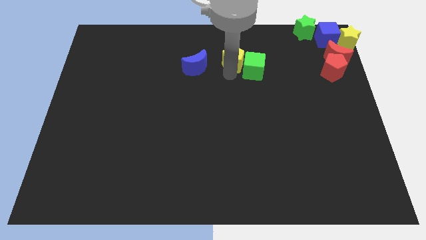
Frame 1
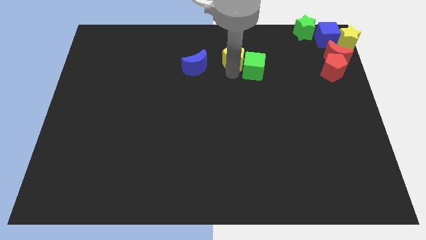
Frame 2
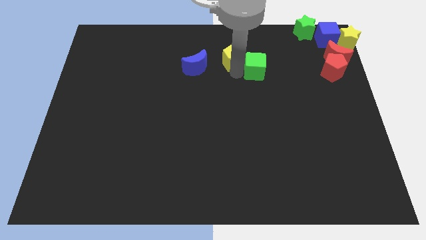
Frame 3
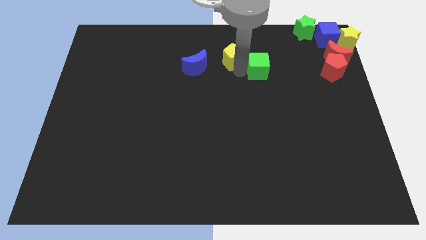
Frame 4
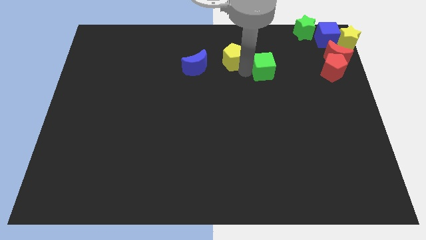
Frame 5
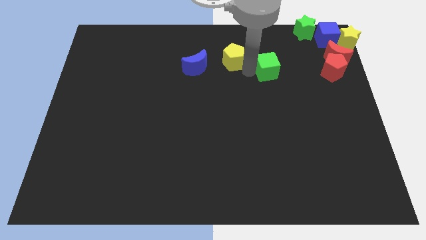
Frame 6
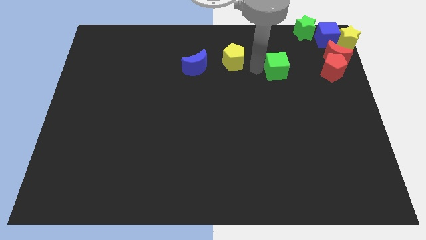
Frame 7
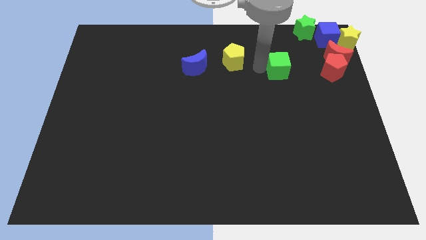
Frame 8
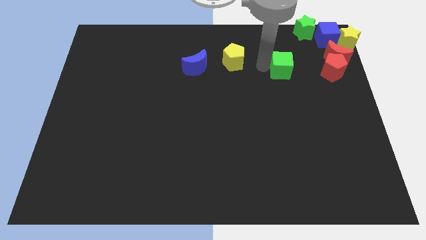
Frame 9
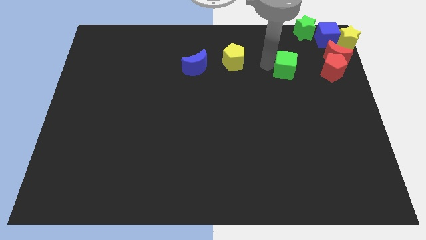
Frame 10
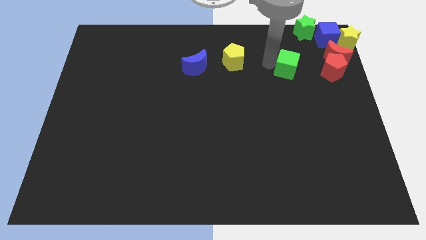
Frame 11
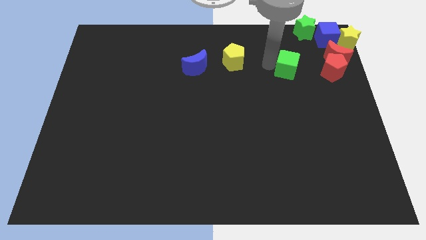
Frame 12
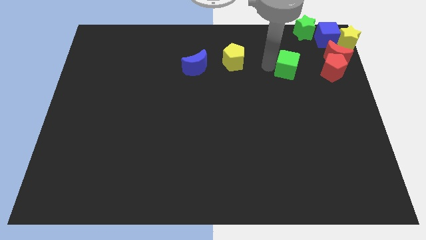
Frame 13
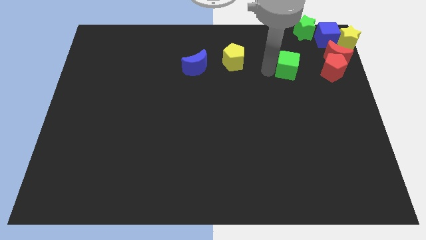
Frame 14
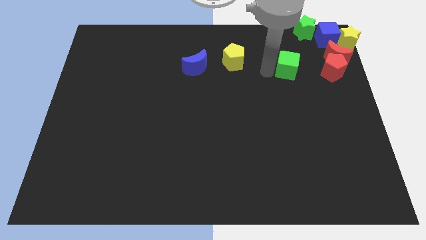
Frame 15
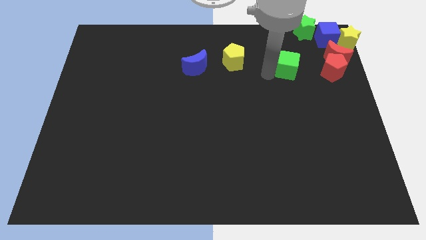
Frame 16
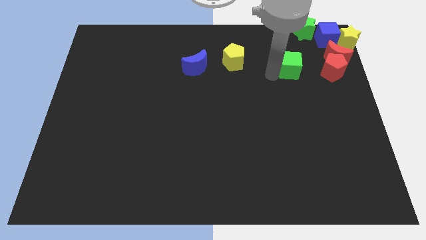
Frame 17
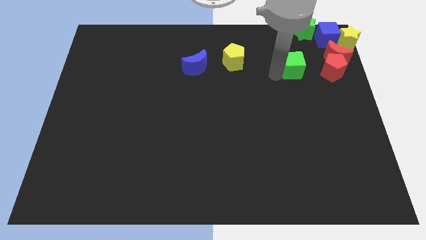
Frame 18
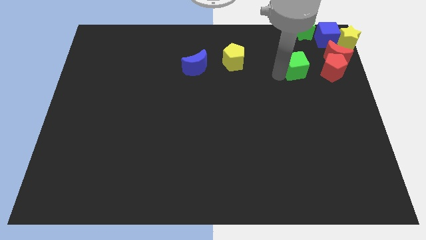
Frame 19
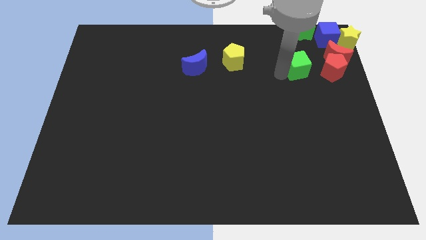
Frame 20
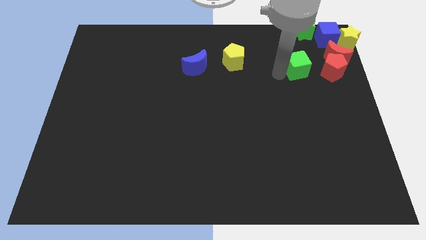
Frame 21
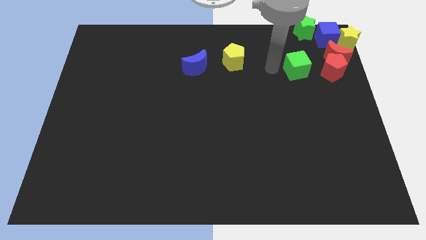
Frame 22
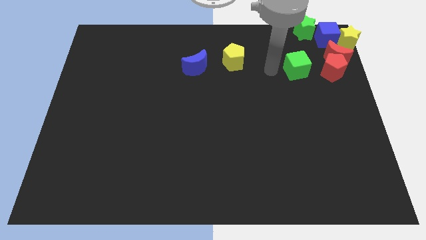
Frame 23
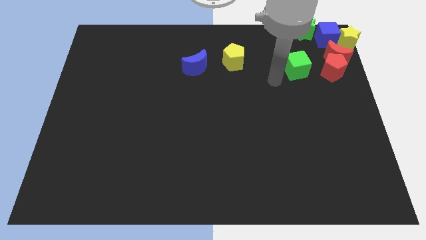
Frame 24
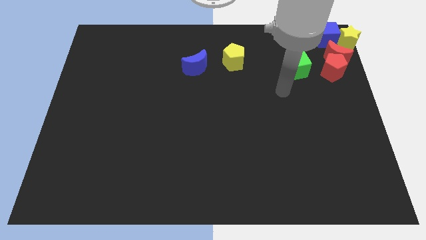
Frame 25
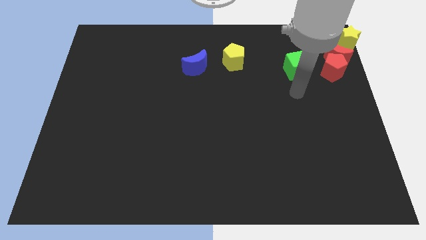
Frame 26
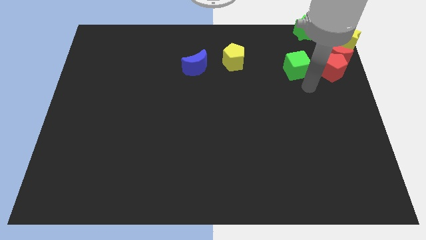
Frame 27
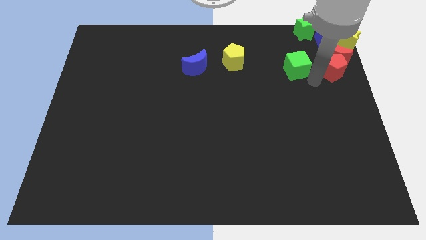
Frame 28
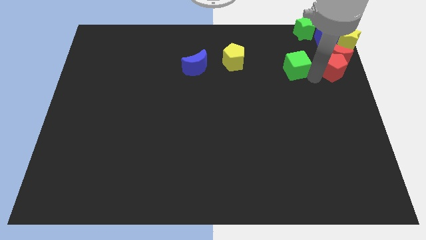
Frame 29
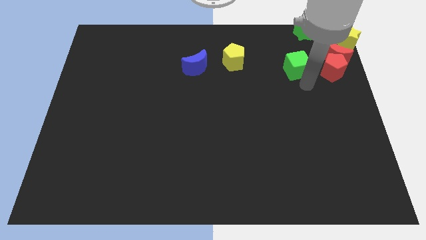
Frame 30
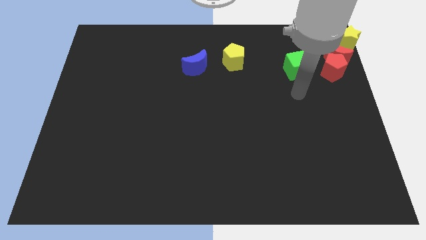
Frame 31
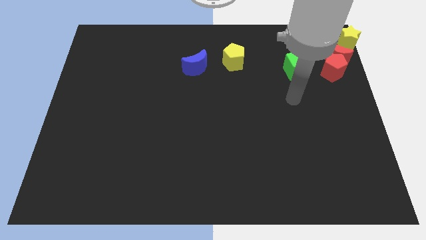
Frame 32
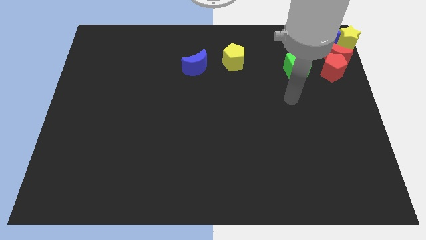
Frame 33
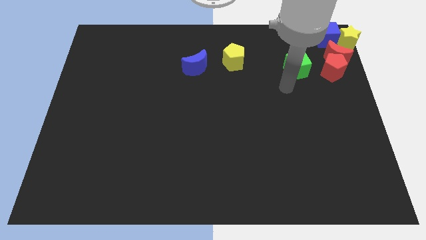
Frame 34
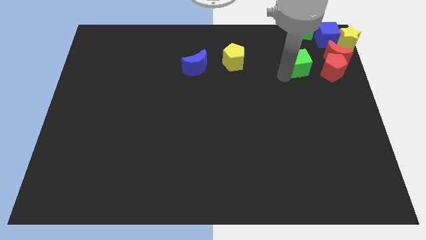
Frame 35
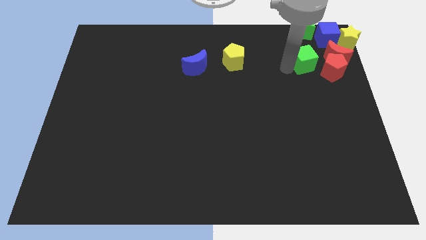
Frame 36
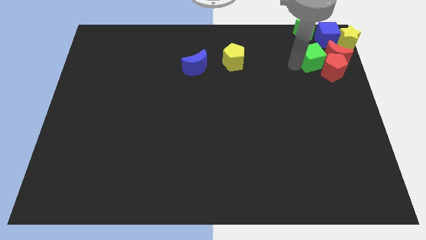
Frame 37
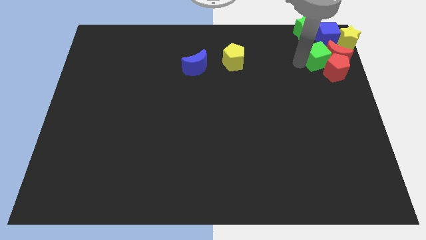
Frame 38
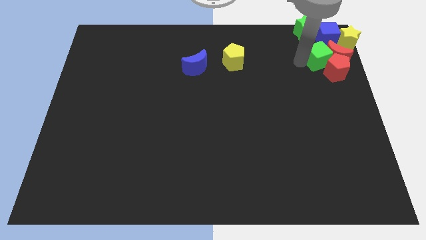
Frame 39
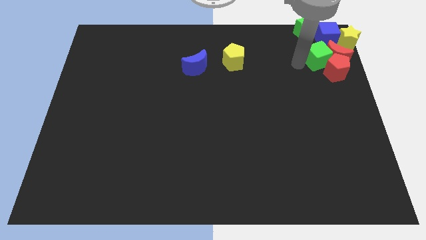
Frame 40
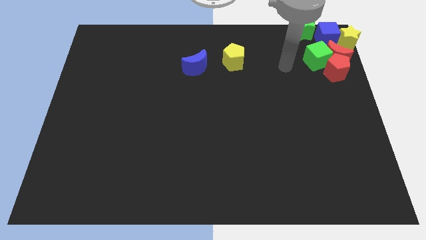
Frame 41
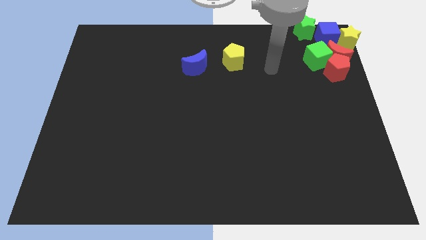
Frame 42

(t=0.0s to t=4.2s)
place green cube to the top right corner of the board

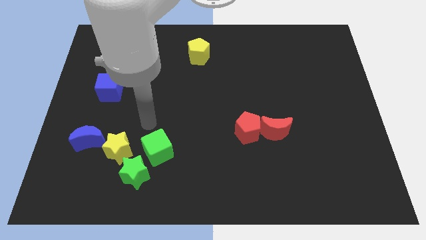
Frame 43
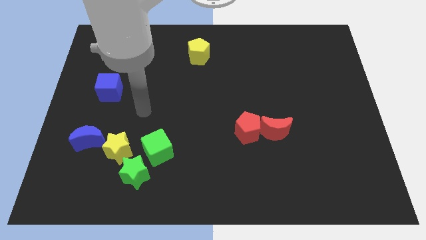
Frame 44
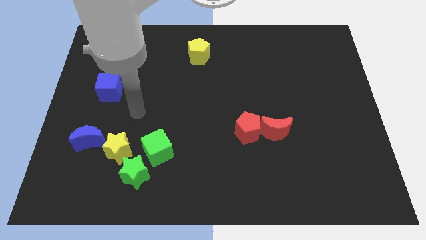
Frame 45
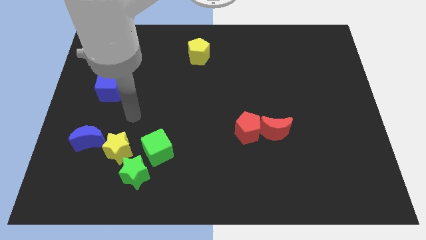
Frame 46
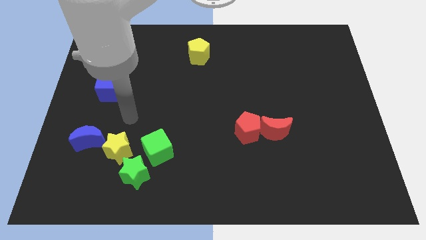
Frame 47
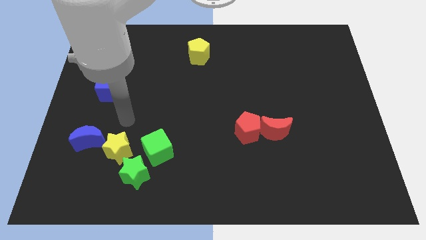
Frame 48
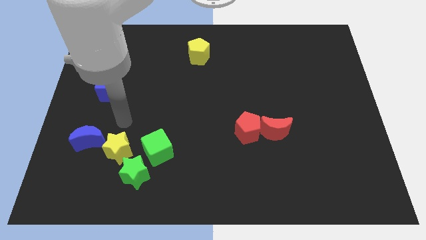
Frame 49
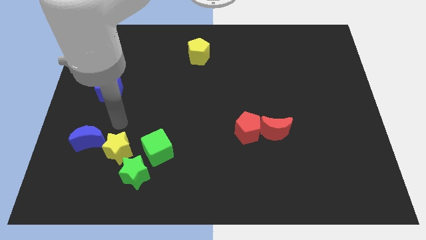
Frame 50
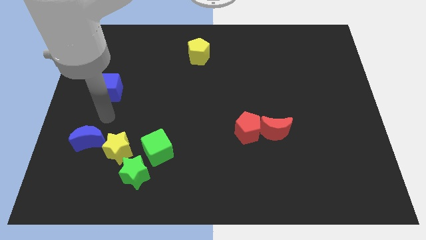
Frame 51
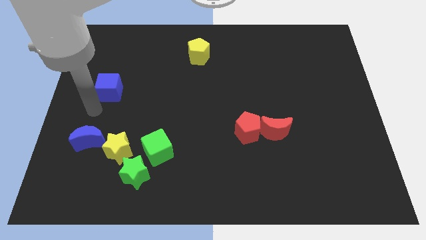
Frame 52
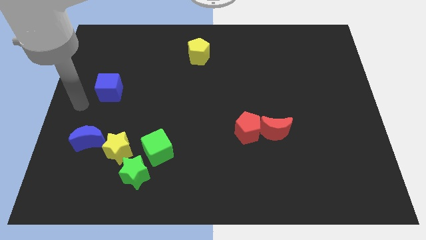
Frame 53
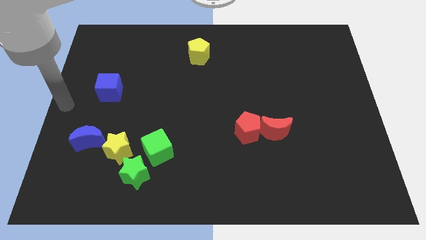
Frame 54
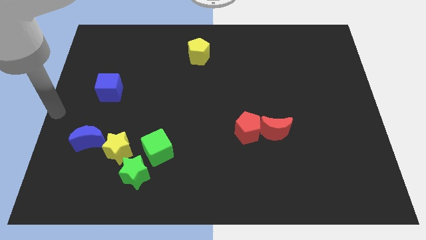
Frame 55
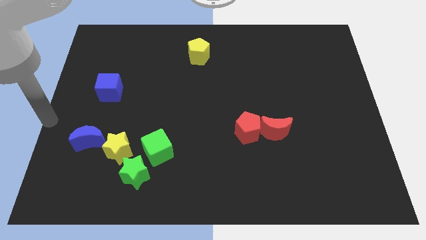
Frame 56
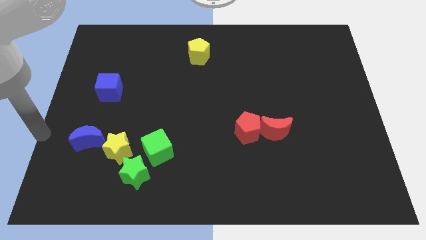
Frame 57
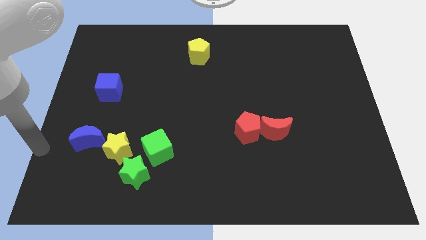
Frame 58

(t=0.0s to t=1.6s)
point your arm at the left of the blue crescent

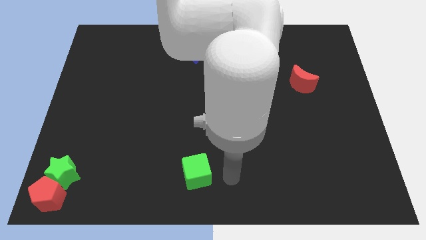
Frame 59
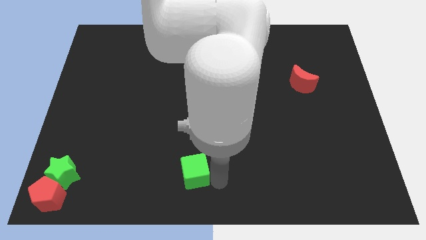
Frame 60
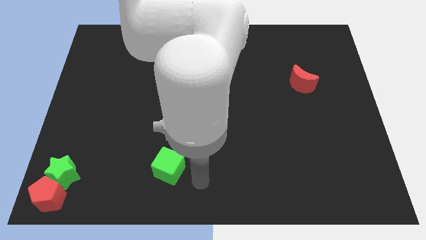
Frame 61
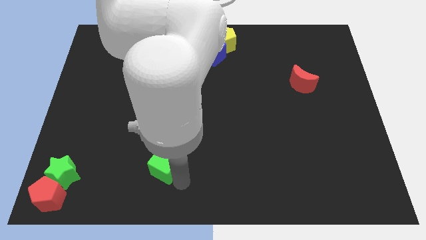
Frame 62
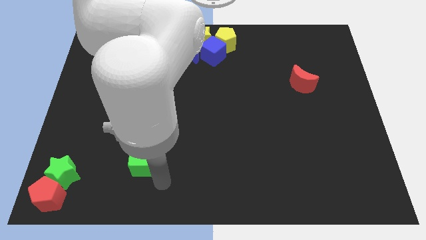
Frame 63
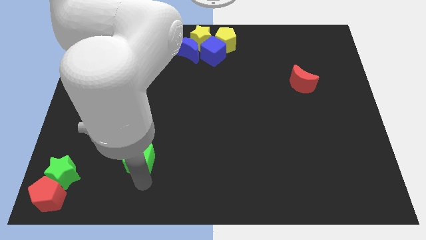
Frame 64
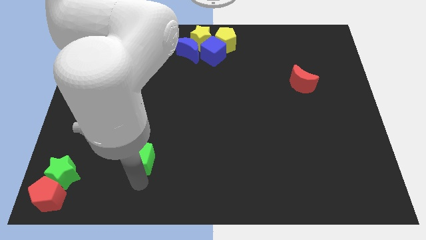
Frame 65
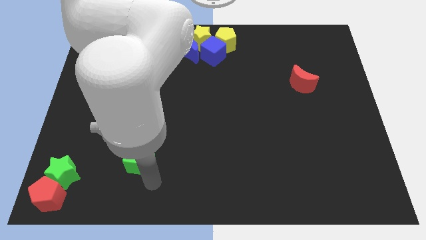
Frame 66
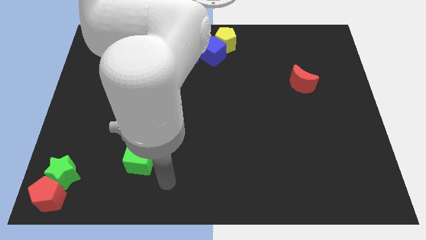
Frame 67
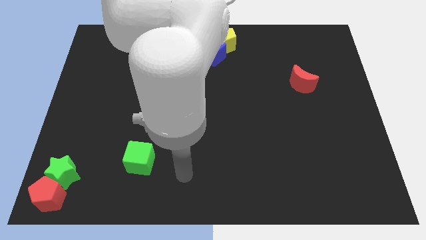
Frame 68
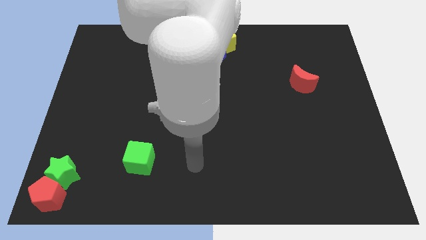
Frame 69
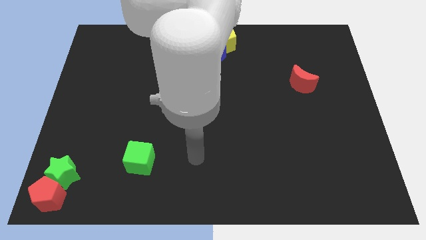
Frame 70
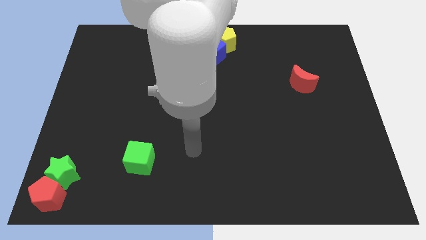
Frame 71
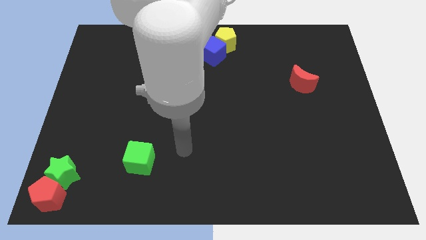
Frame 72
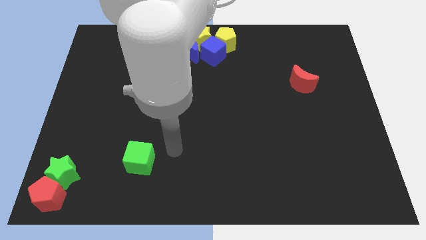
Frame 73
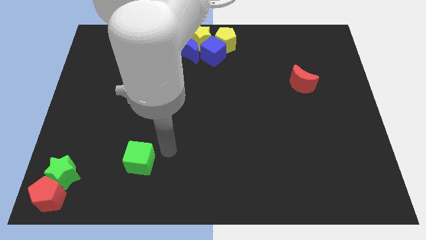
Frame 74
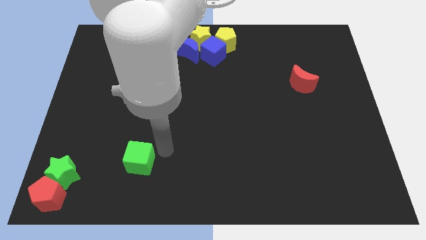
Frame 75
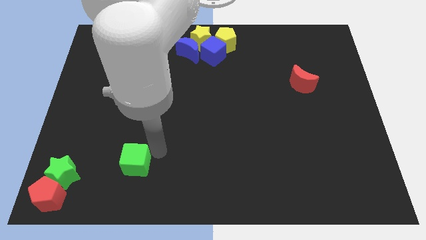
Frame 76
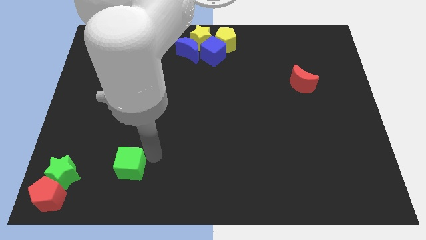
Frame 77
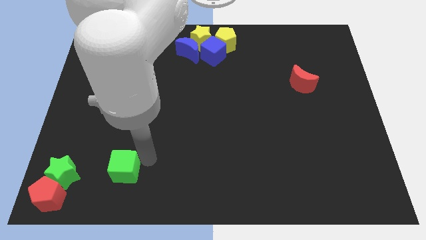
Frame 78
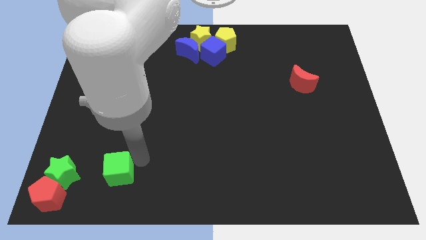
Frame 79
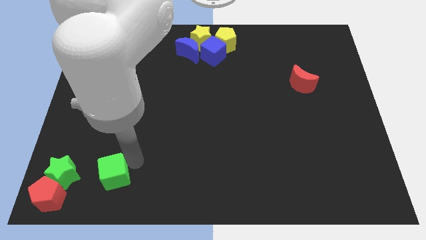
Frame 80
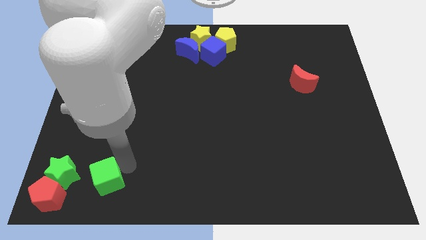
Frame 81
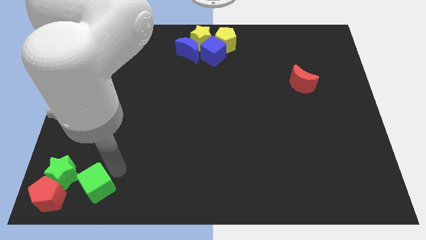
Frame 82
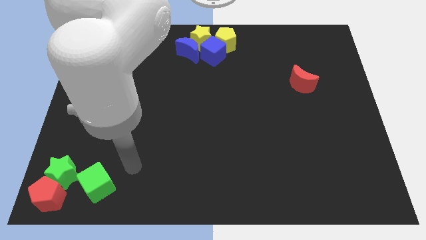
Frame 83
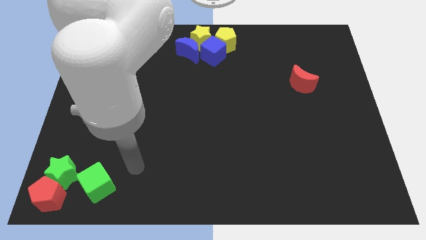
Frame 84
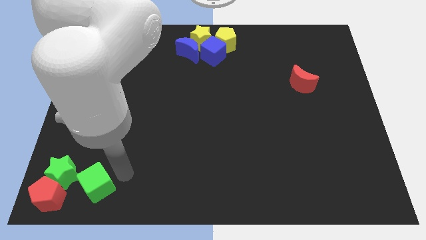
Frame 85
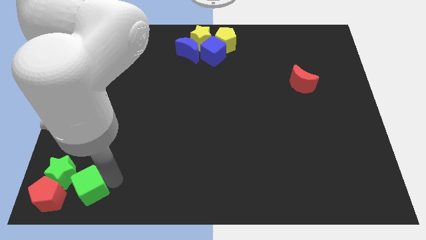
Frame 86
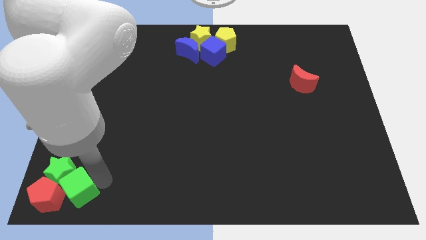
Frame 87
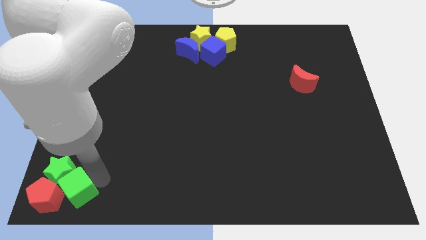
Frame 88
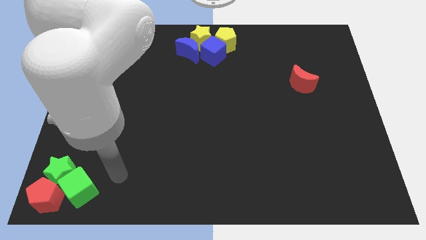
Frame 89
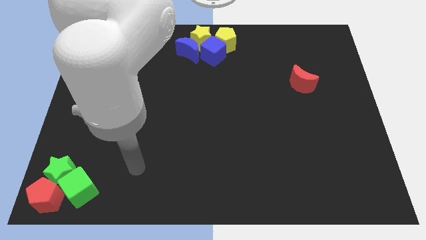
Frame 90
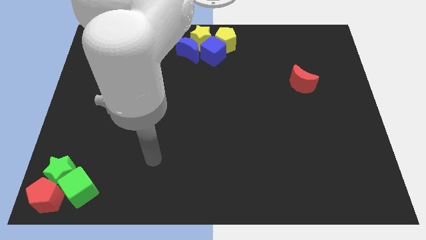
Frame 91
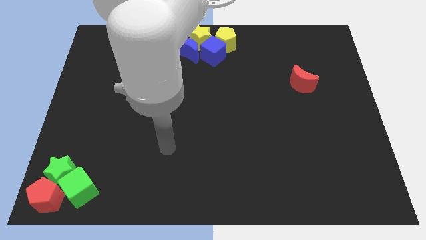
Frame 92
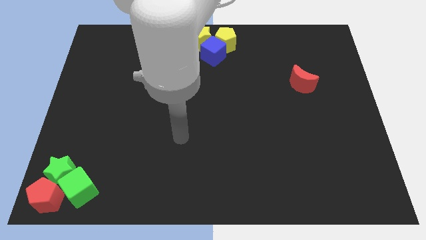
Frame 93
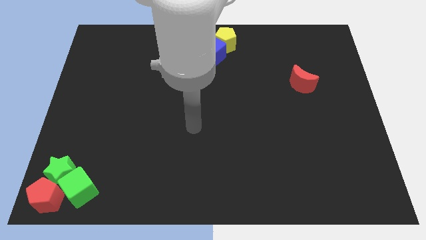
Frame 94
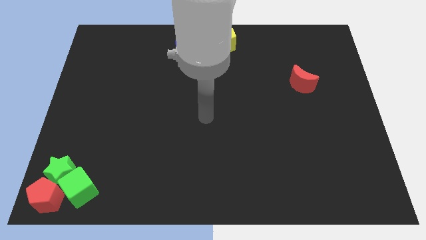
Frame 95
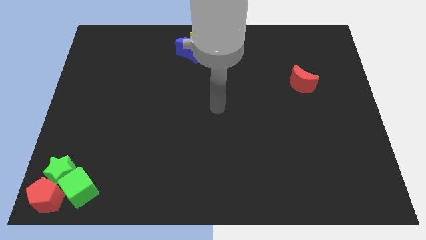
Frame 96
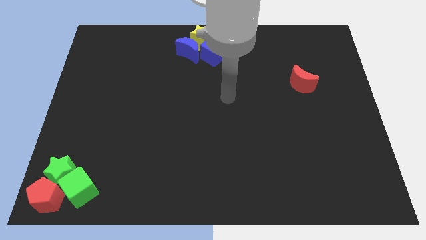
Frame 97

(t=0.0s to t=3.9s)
move the green cube parallel to the red pentagon
